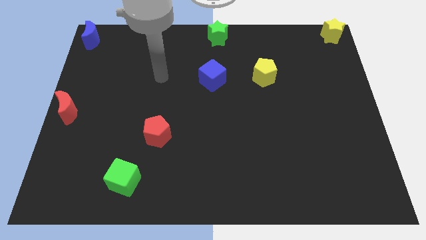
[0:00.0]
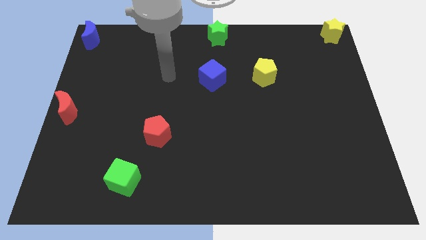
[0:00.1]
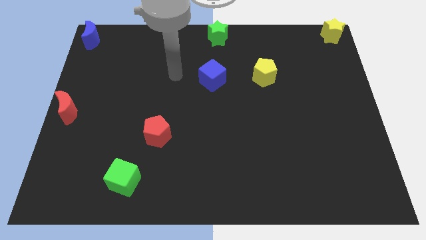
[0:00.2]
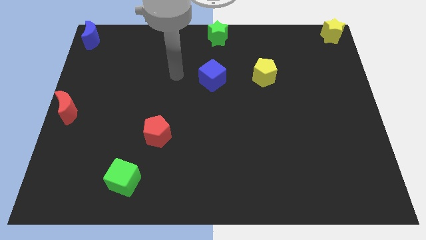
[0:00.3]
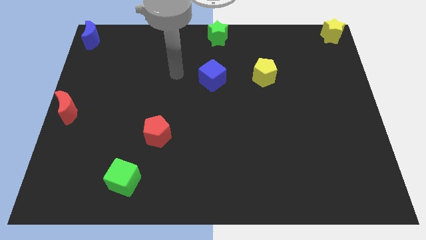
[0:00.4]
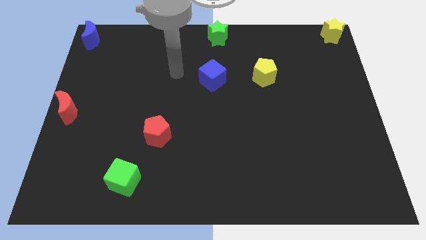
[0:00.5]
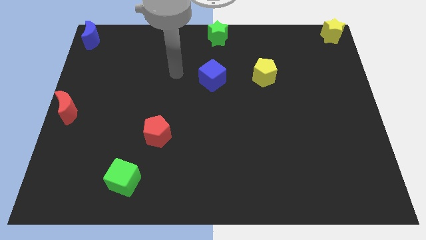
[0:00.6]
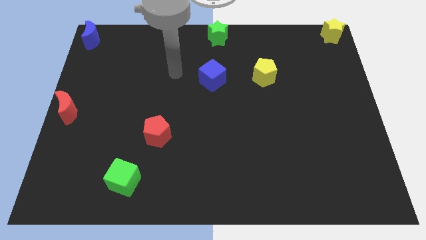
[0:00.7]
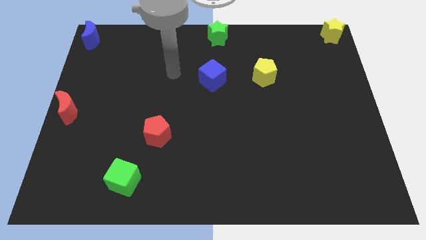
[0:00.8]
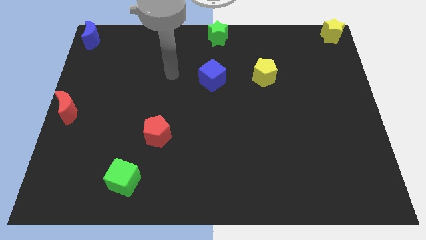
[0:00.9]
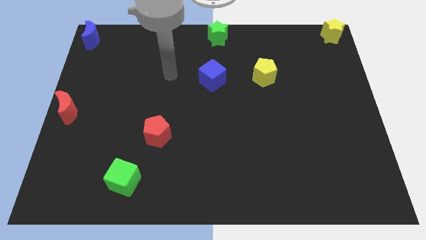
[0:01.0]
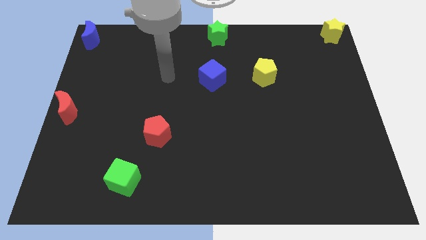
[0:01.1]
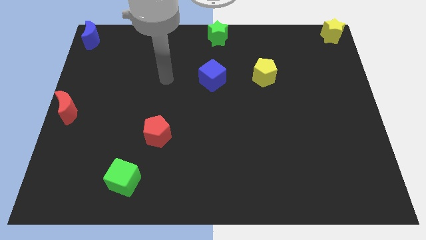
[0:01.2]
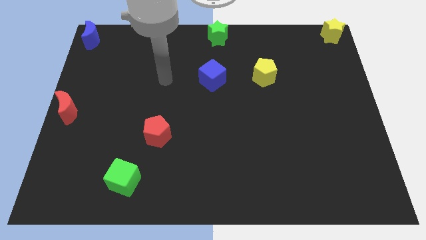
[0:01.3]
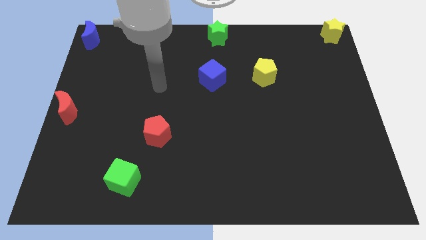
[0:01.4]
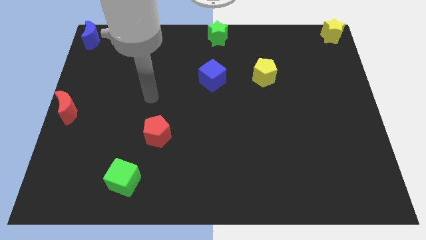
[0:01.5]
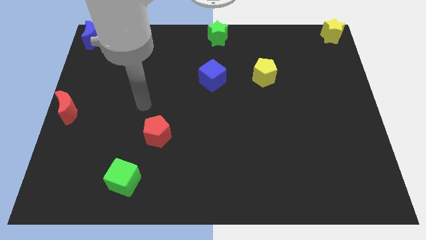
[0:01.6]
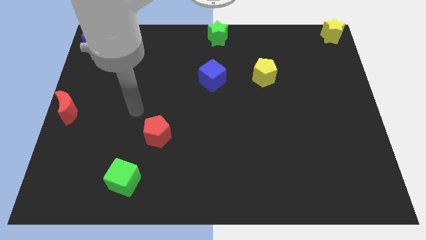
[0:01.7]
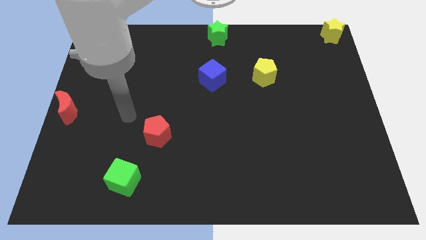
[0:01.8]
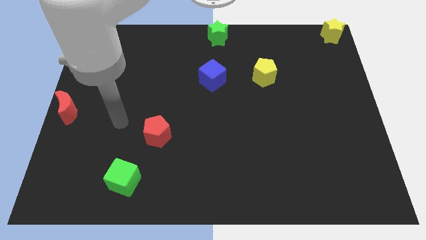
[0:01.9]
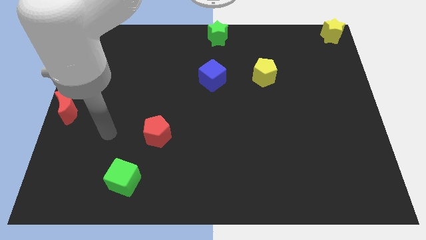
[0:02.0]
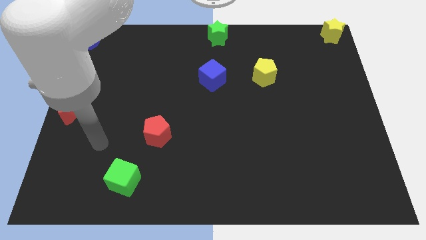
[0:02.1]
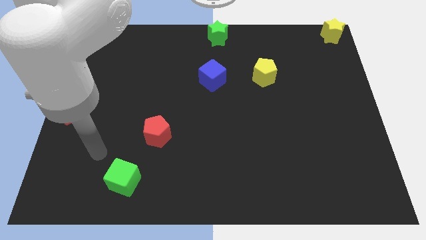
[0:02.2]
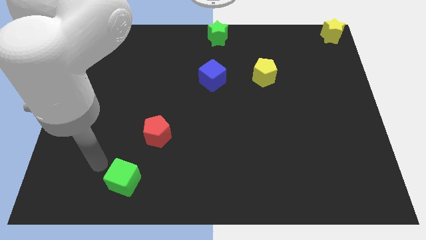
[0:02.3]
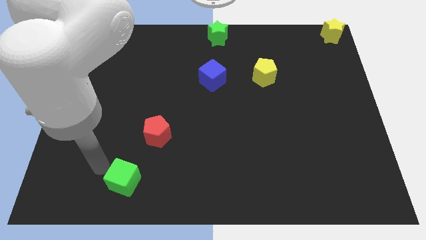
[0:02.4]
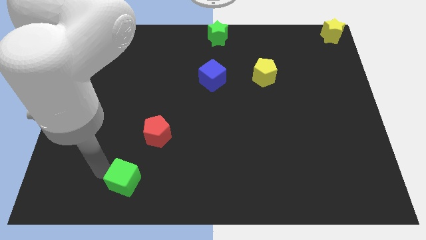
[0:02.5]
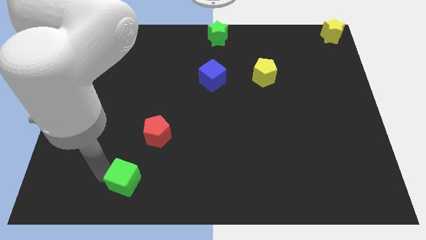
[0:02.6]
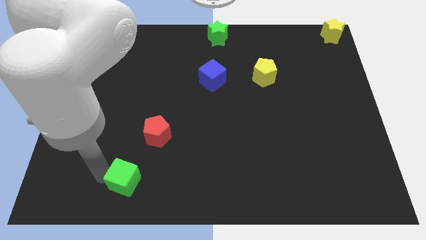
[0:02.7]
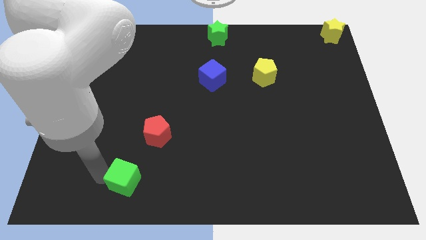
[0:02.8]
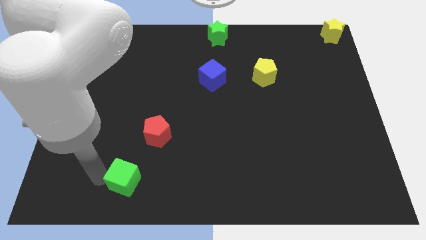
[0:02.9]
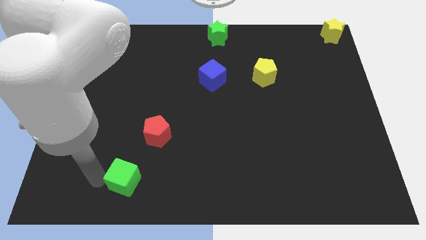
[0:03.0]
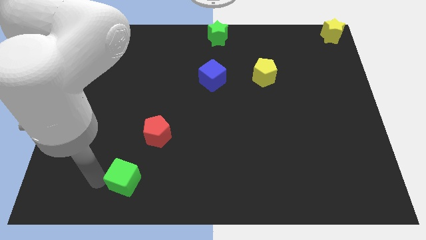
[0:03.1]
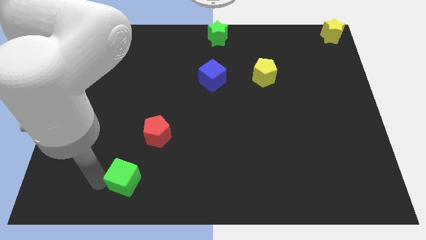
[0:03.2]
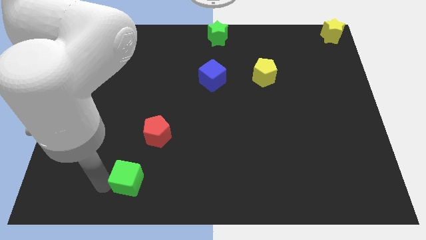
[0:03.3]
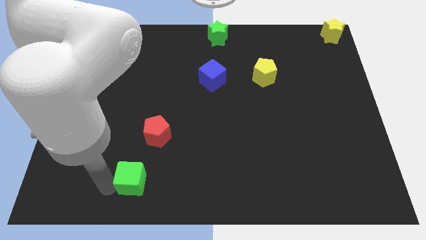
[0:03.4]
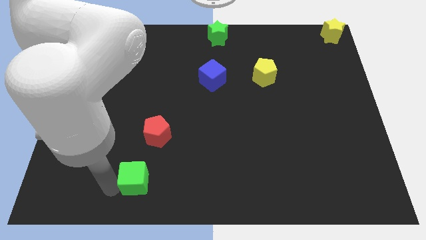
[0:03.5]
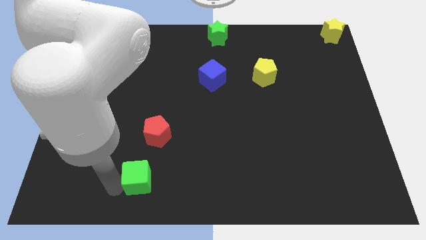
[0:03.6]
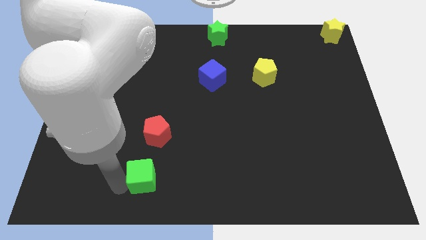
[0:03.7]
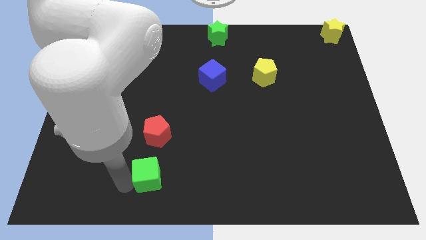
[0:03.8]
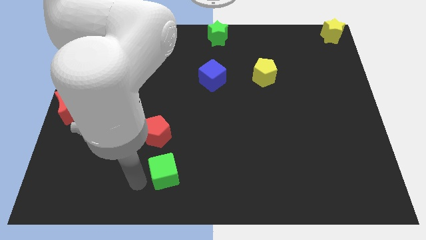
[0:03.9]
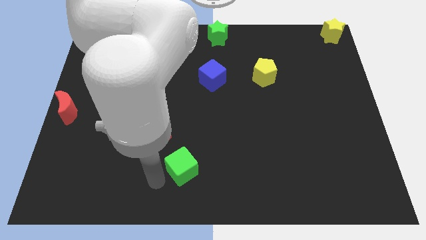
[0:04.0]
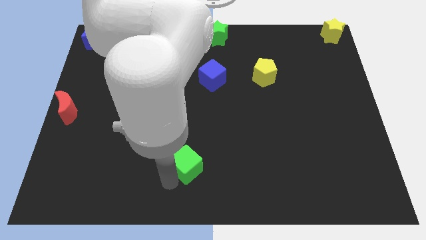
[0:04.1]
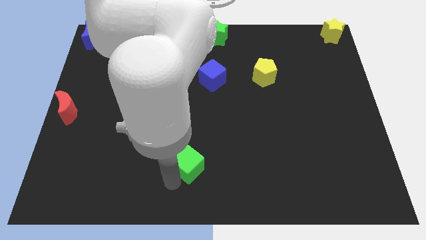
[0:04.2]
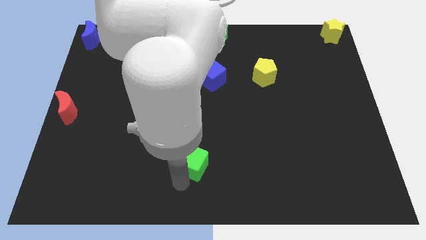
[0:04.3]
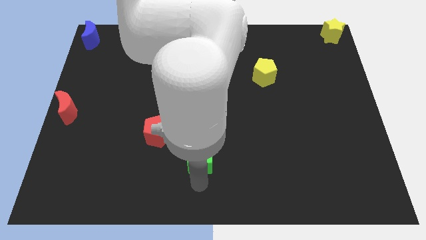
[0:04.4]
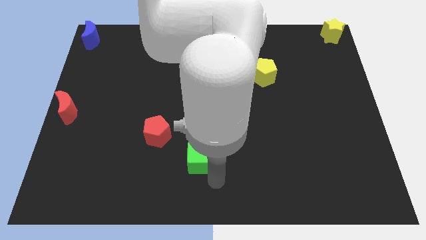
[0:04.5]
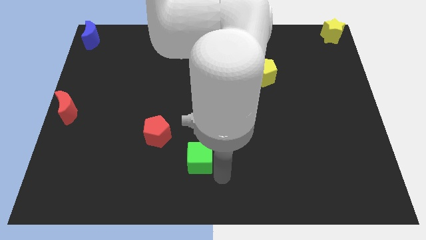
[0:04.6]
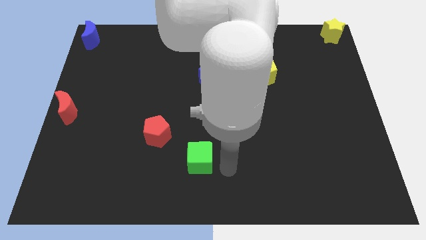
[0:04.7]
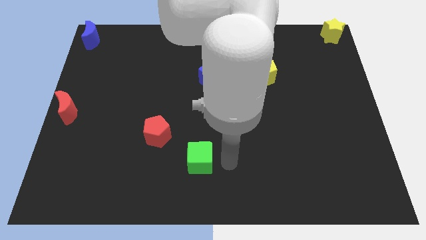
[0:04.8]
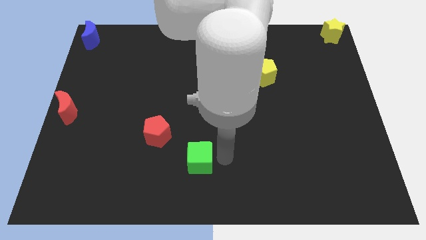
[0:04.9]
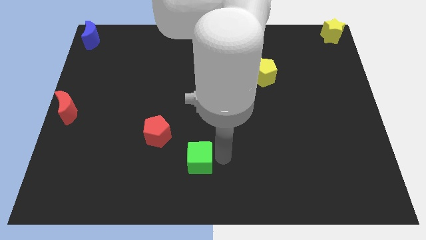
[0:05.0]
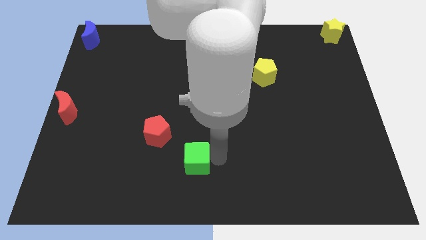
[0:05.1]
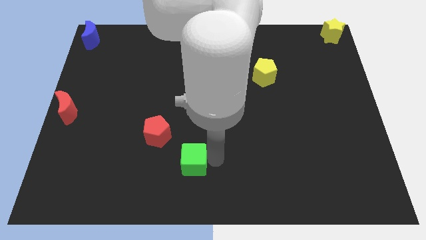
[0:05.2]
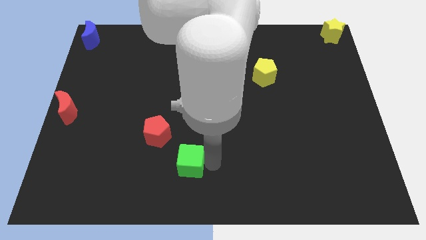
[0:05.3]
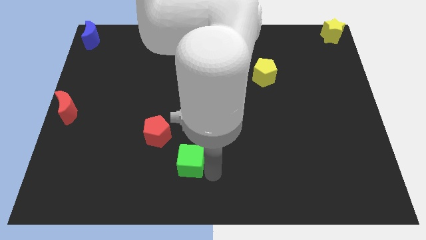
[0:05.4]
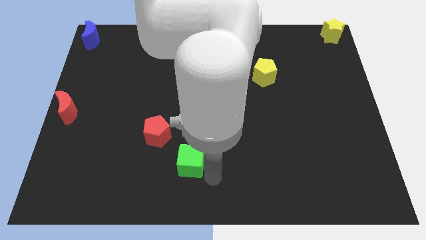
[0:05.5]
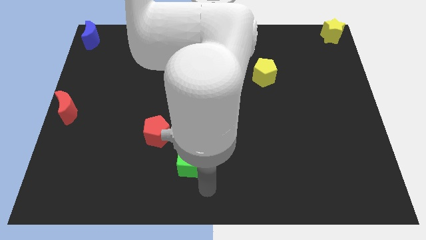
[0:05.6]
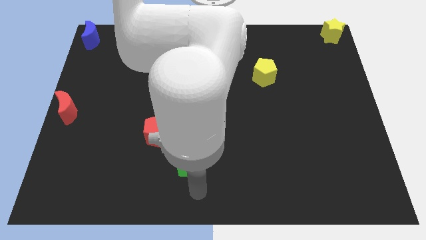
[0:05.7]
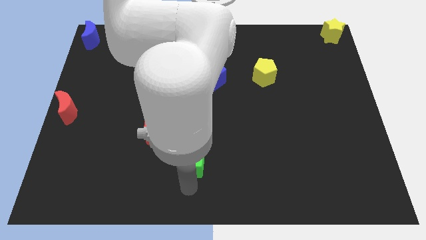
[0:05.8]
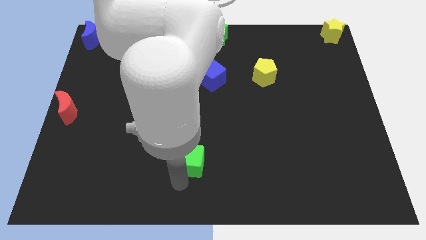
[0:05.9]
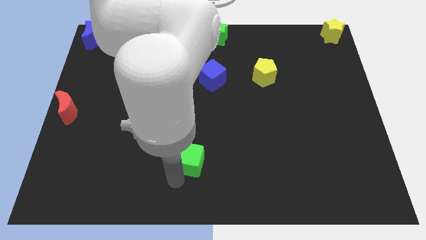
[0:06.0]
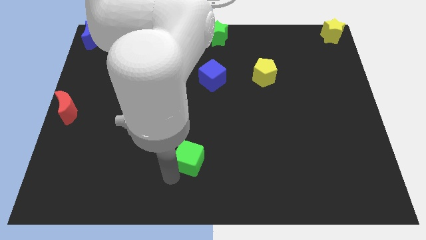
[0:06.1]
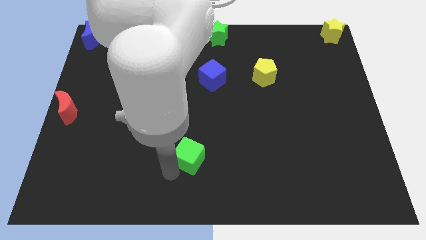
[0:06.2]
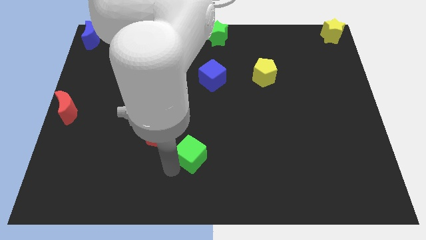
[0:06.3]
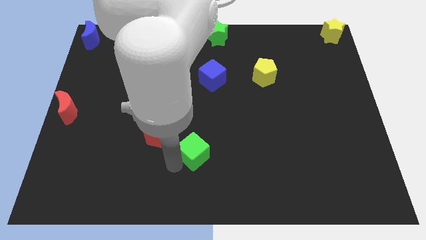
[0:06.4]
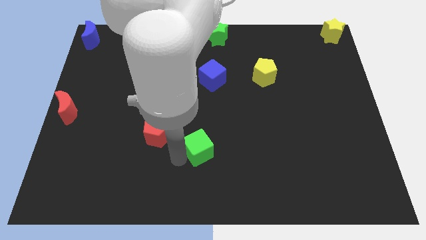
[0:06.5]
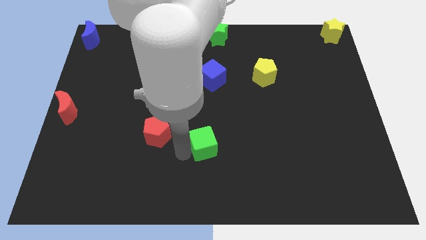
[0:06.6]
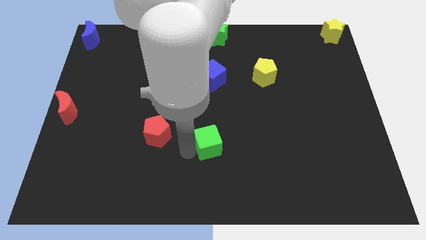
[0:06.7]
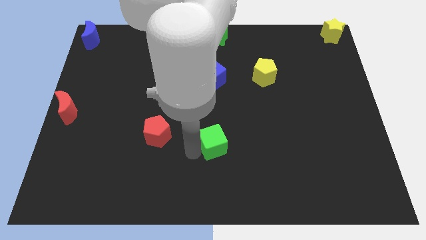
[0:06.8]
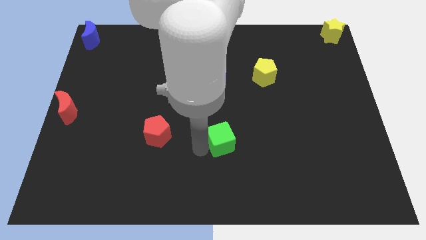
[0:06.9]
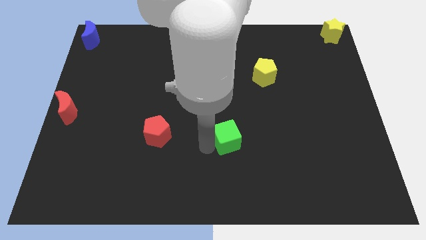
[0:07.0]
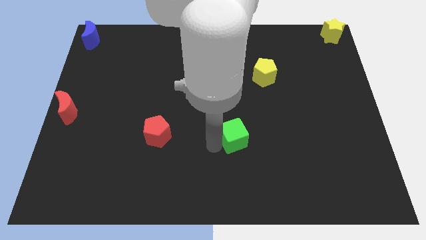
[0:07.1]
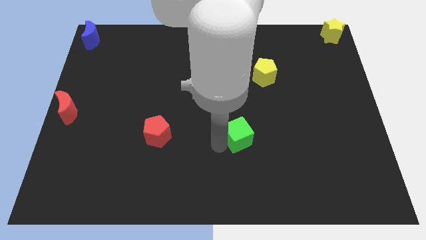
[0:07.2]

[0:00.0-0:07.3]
place the green cube parallel right to the red pentagon

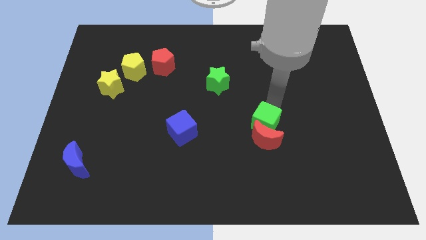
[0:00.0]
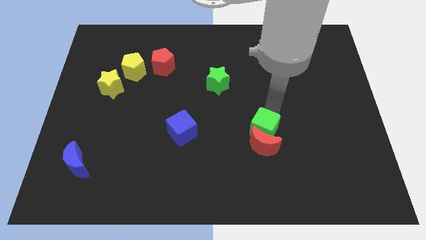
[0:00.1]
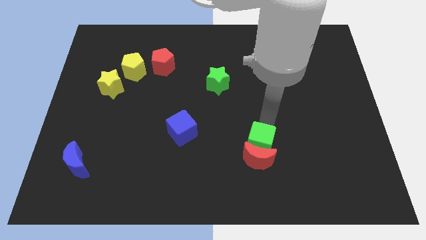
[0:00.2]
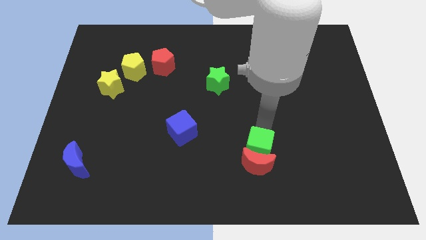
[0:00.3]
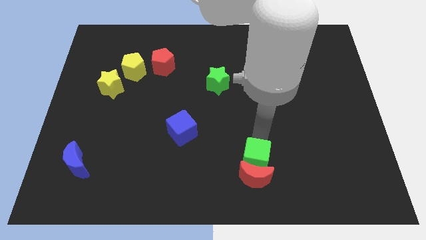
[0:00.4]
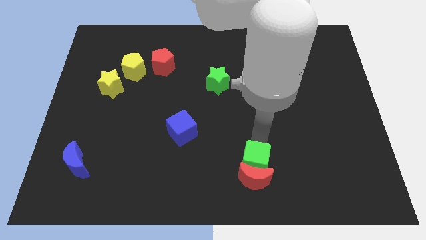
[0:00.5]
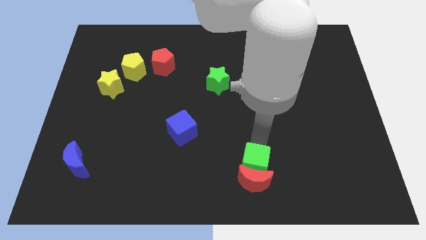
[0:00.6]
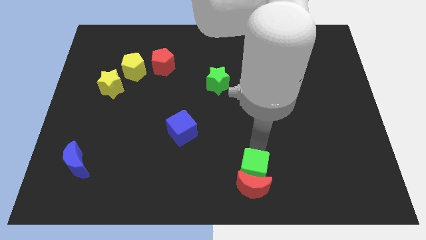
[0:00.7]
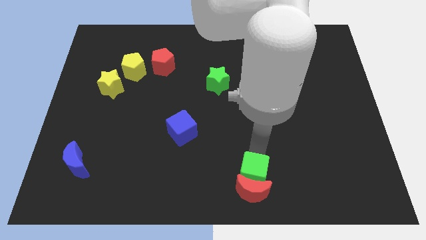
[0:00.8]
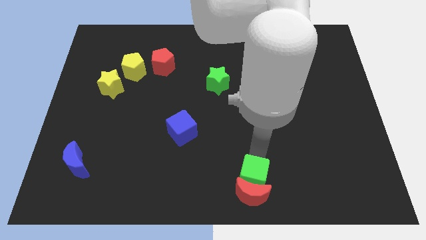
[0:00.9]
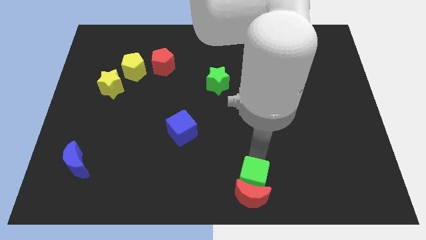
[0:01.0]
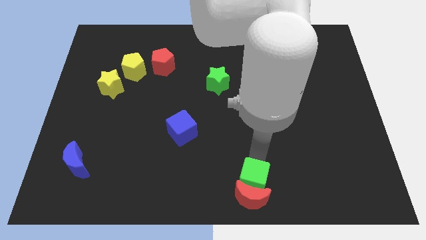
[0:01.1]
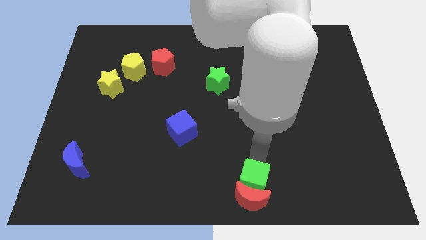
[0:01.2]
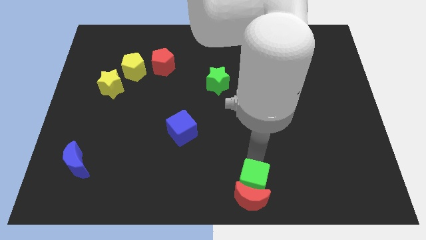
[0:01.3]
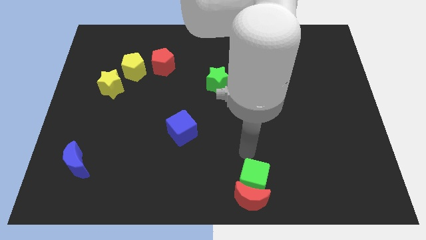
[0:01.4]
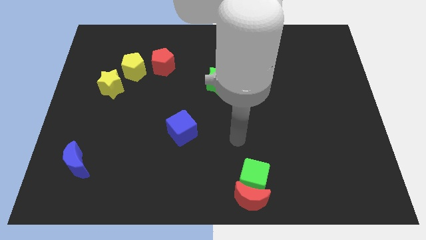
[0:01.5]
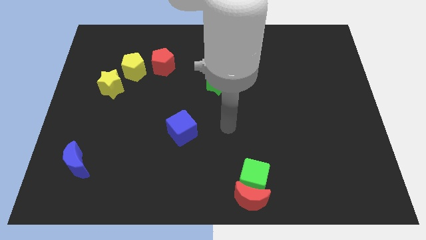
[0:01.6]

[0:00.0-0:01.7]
push the red moon and green cube to the bottom center
